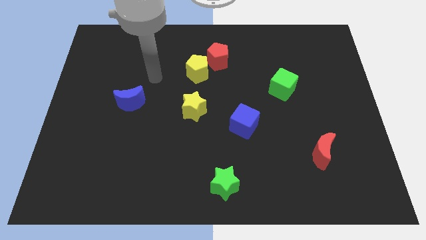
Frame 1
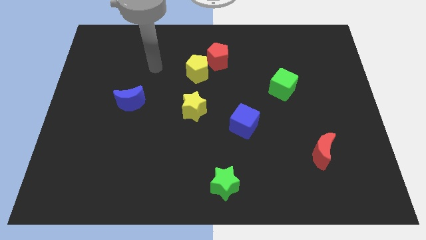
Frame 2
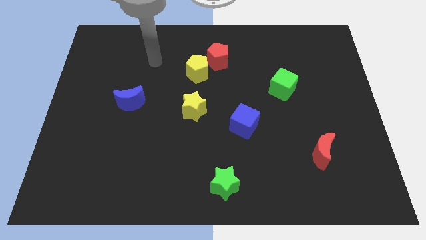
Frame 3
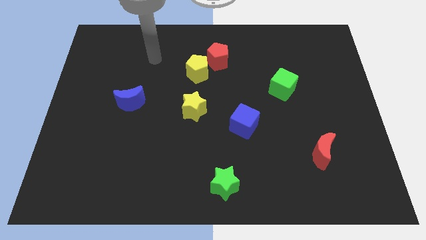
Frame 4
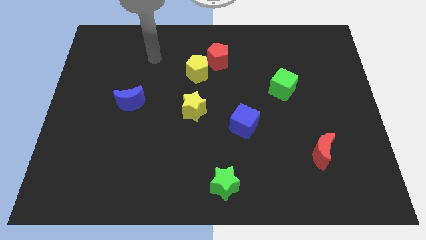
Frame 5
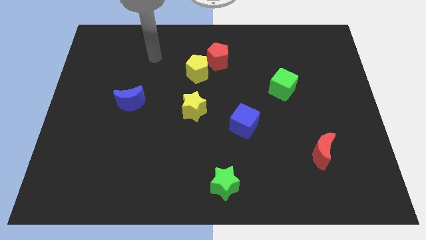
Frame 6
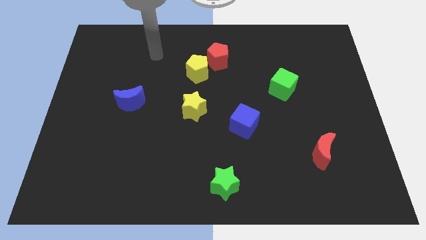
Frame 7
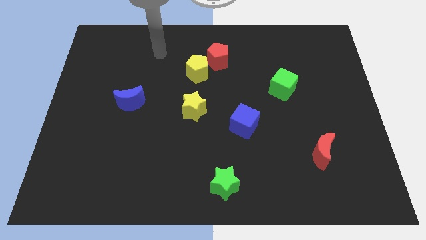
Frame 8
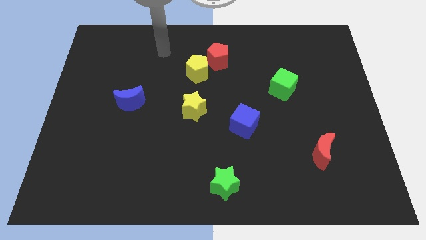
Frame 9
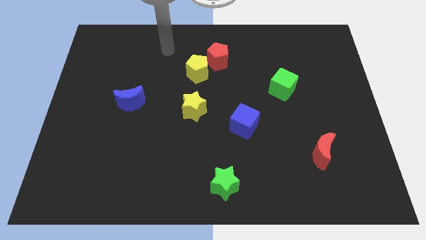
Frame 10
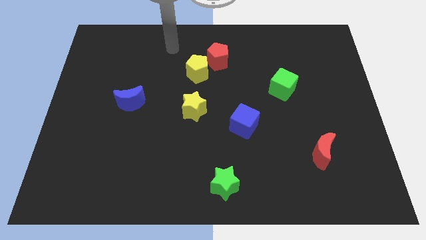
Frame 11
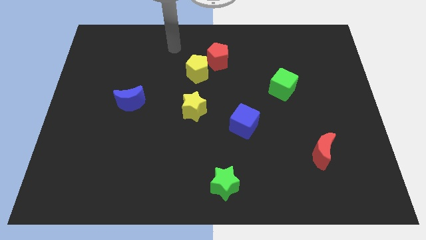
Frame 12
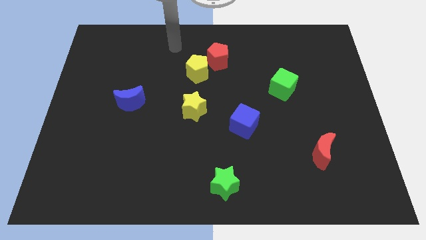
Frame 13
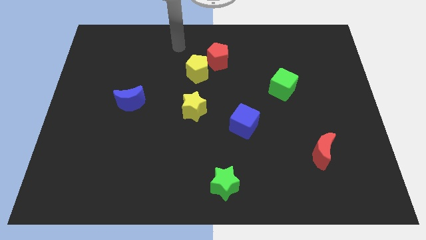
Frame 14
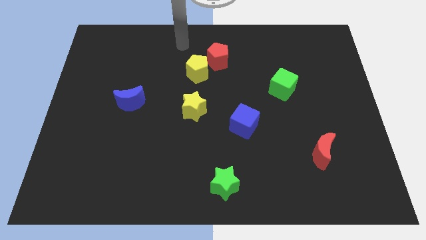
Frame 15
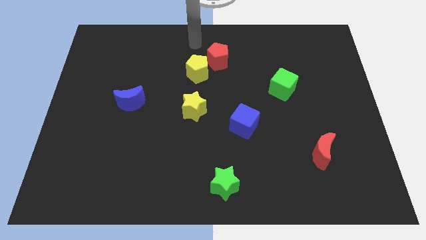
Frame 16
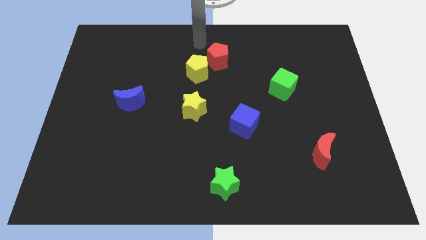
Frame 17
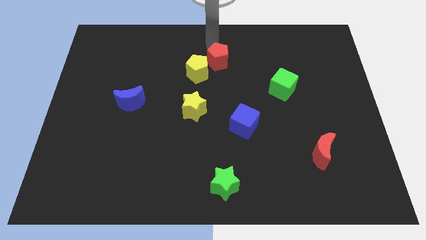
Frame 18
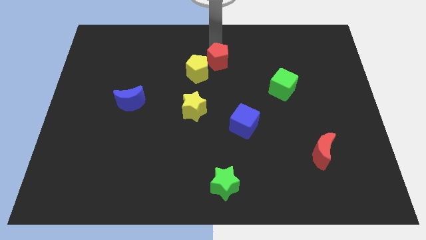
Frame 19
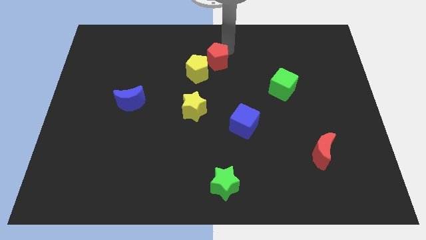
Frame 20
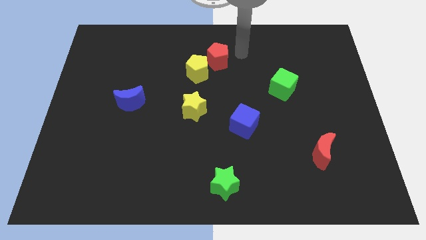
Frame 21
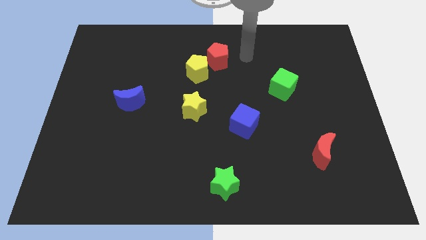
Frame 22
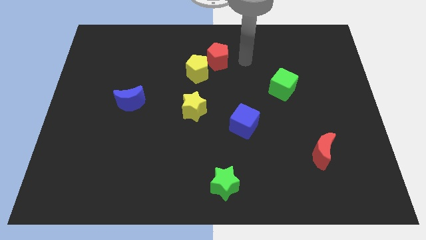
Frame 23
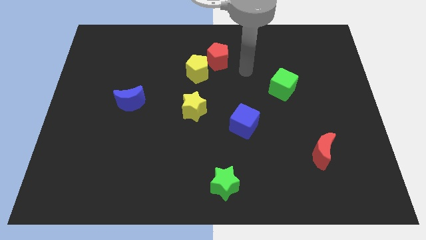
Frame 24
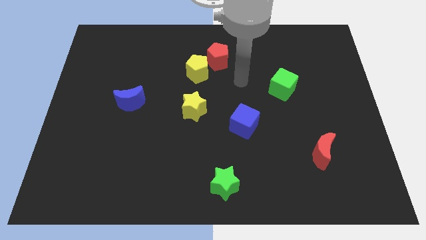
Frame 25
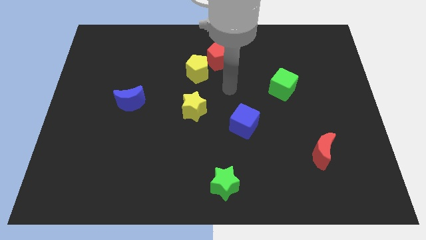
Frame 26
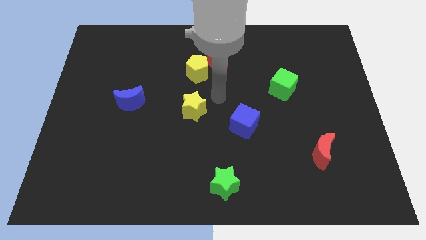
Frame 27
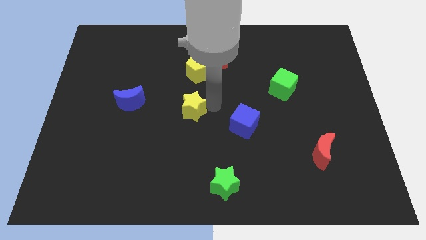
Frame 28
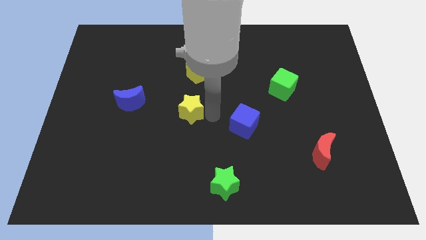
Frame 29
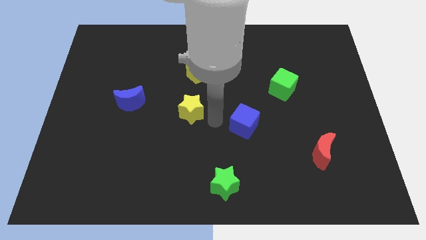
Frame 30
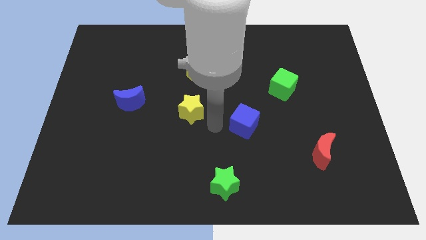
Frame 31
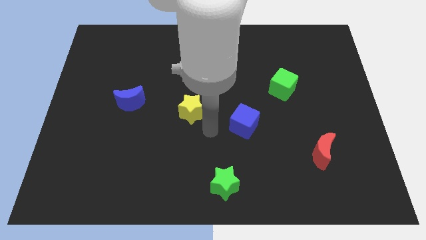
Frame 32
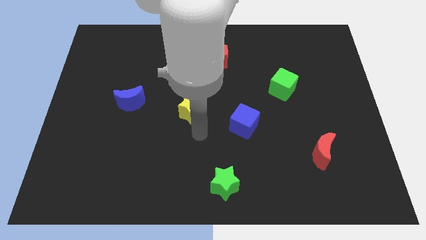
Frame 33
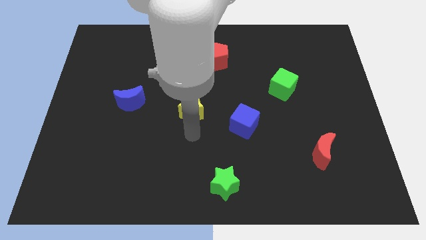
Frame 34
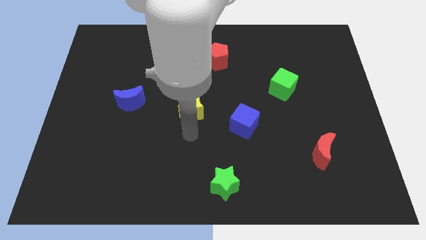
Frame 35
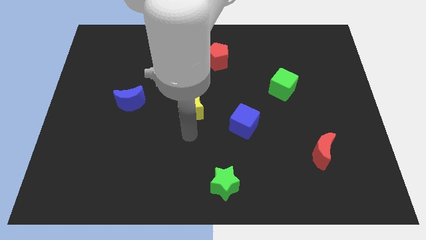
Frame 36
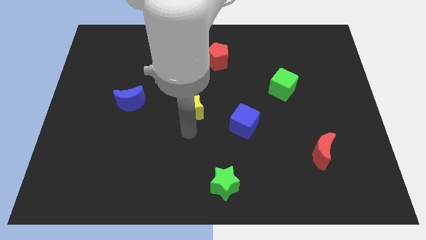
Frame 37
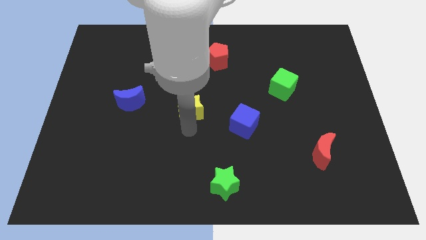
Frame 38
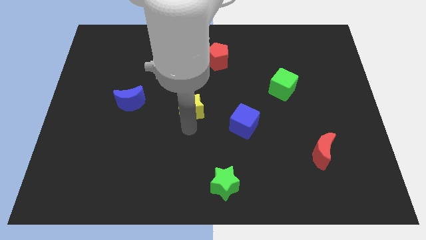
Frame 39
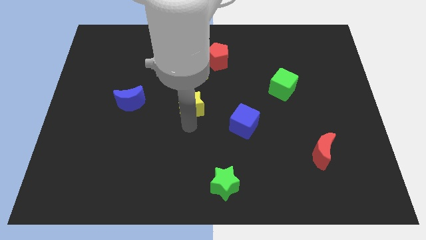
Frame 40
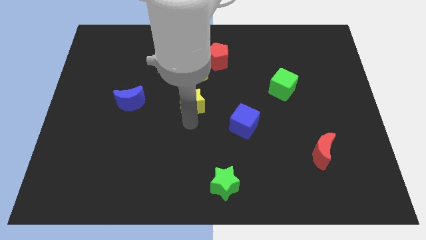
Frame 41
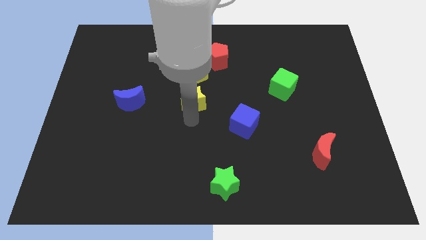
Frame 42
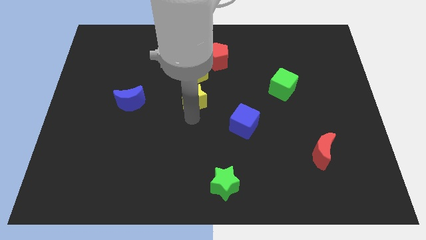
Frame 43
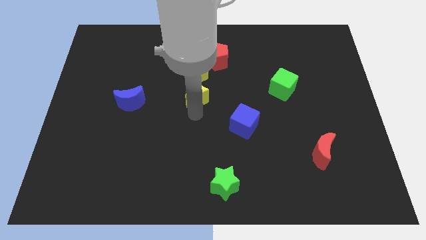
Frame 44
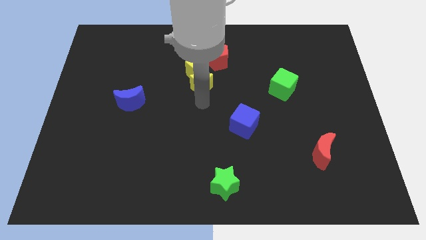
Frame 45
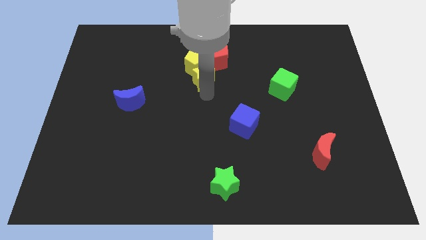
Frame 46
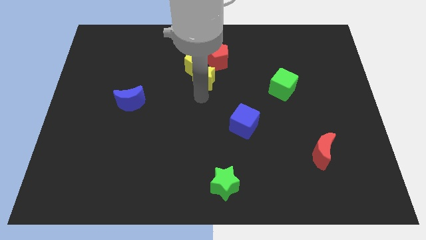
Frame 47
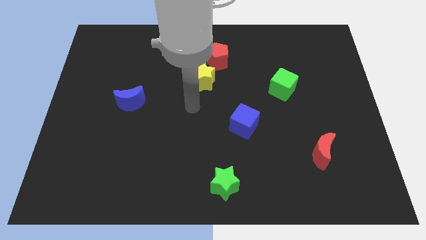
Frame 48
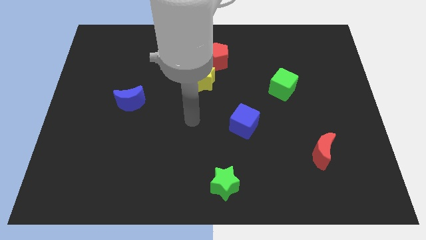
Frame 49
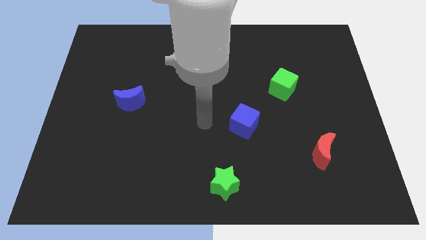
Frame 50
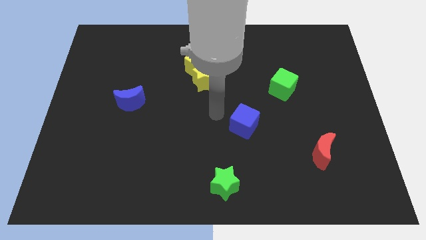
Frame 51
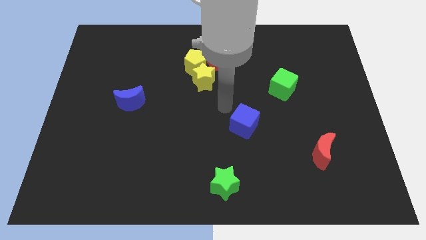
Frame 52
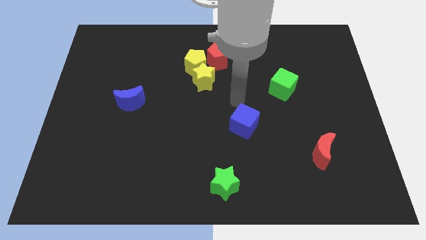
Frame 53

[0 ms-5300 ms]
move the yellow star below the yellow pentagon

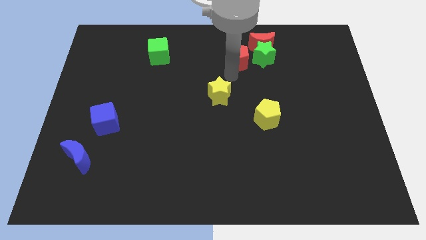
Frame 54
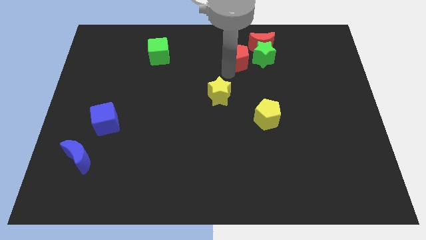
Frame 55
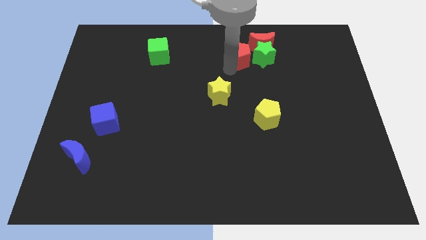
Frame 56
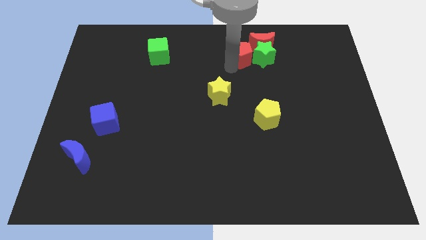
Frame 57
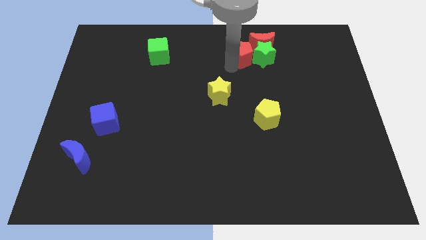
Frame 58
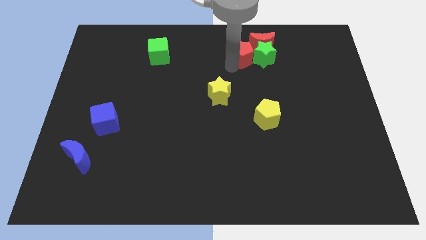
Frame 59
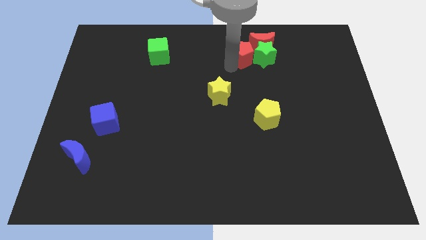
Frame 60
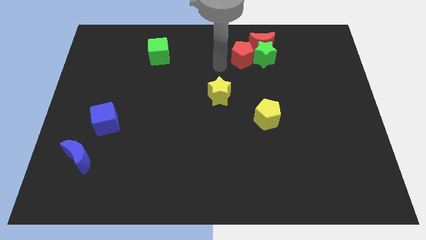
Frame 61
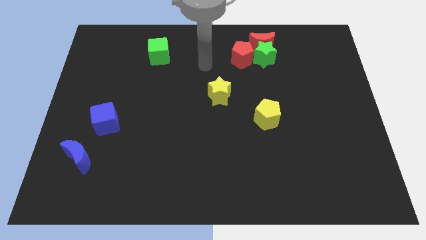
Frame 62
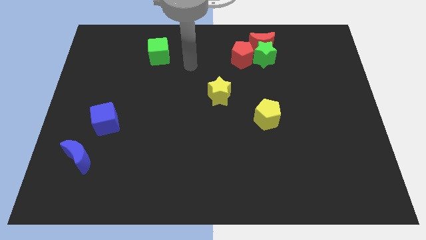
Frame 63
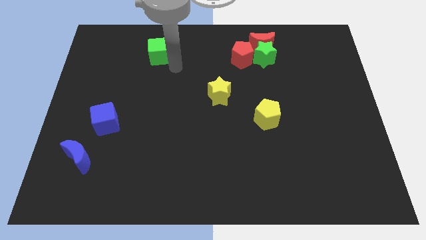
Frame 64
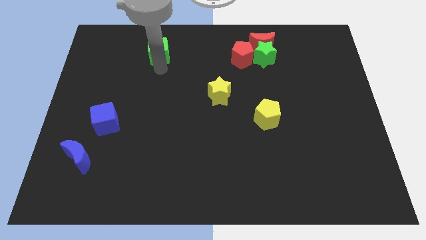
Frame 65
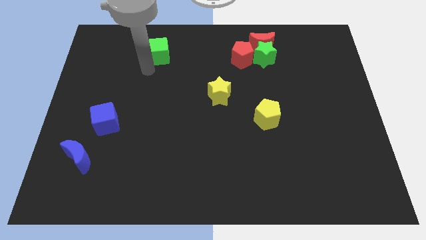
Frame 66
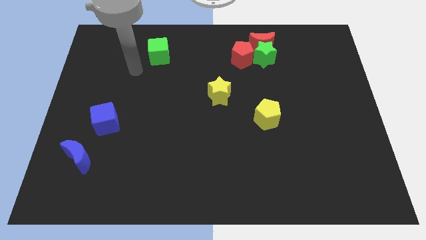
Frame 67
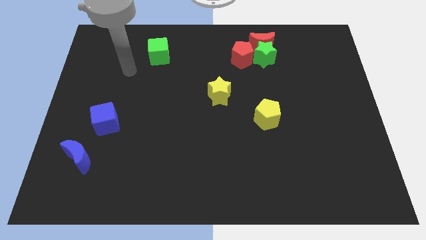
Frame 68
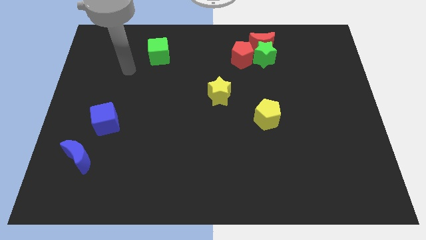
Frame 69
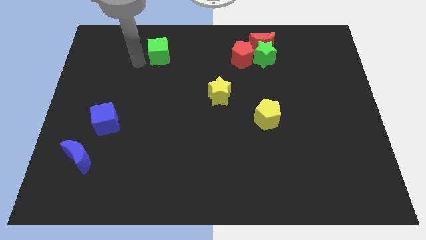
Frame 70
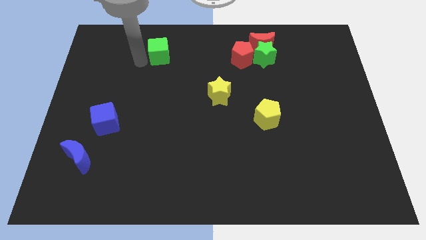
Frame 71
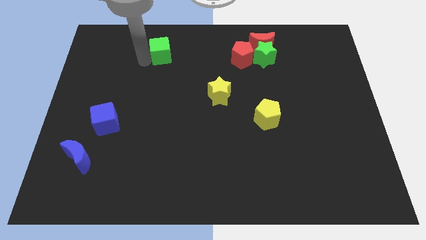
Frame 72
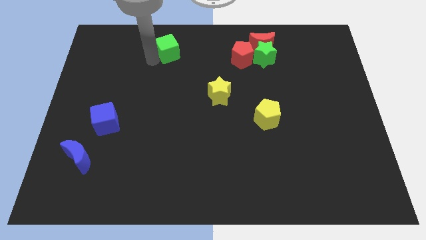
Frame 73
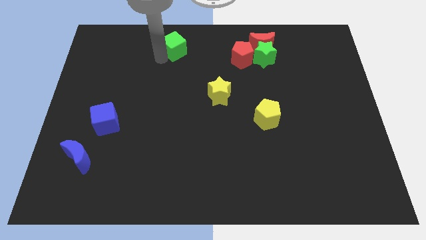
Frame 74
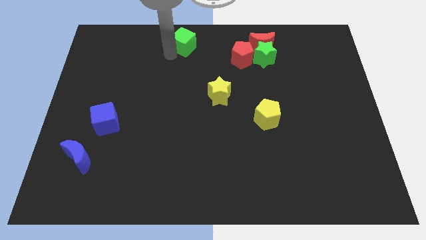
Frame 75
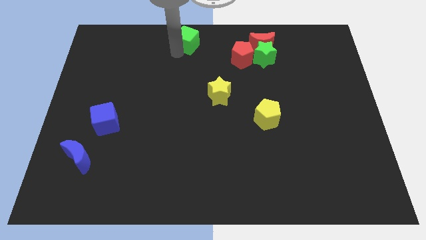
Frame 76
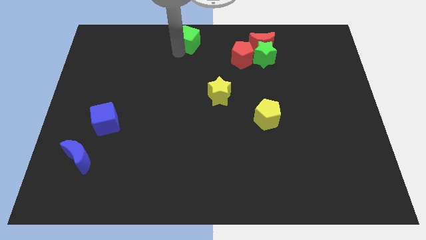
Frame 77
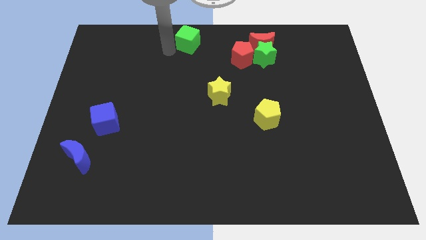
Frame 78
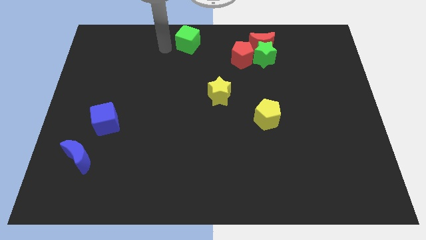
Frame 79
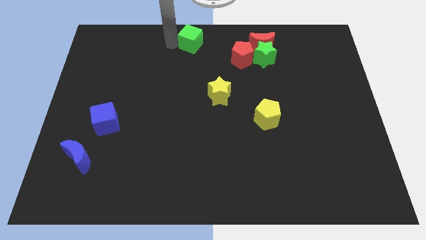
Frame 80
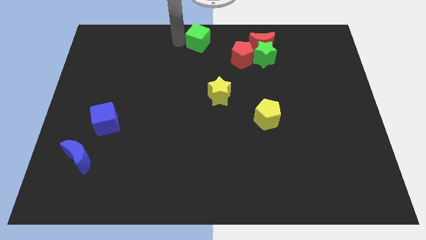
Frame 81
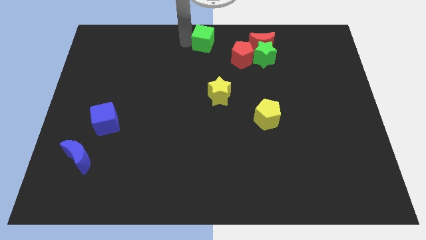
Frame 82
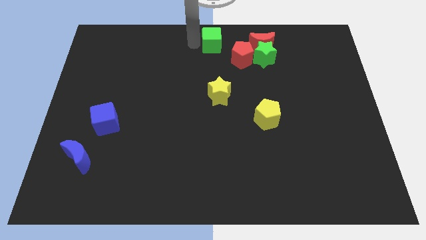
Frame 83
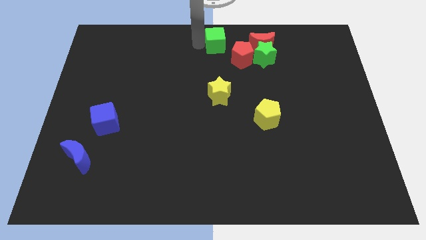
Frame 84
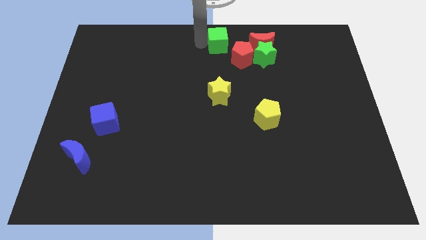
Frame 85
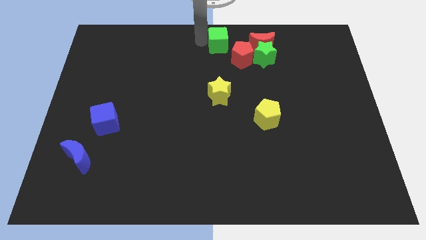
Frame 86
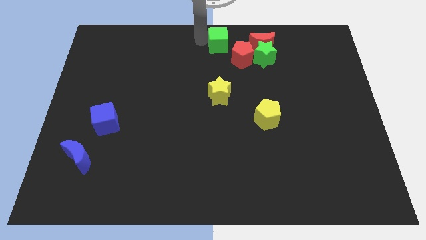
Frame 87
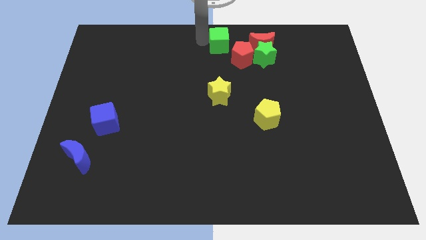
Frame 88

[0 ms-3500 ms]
move green cube to the top center of the board

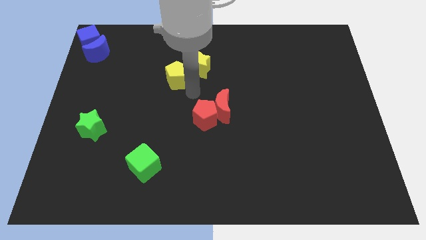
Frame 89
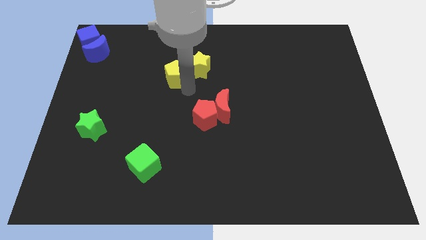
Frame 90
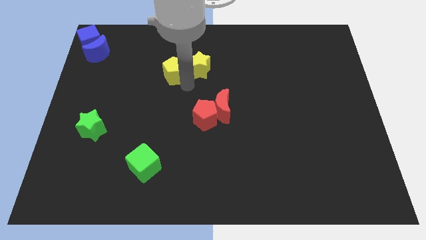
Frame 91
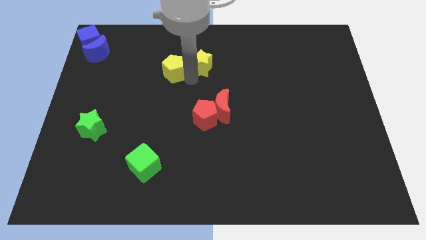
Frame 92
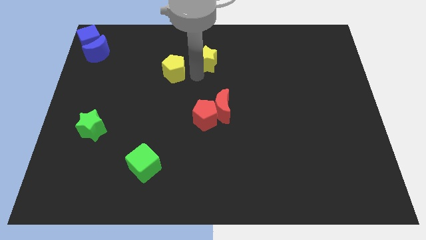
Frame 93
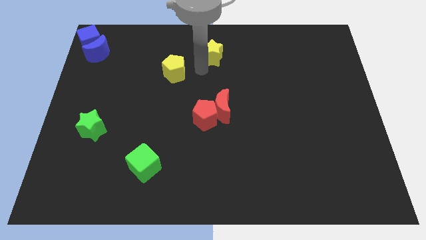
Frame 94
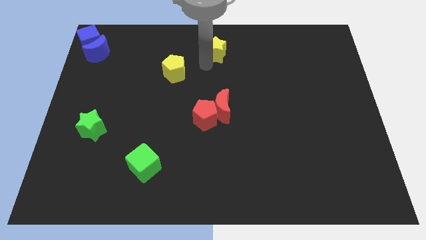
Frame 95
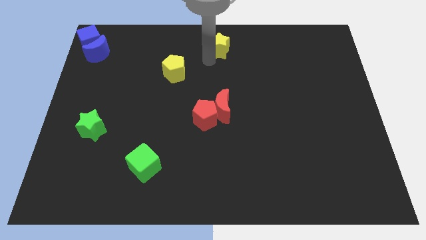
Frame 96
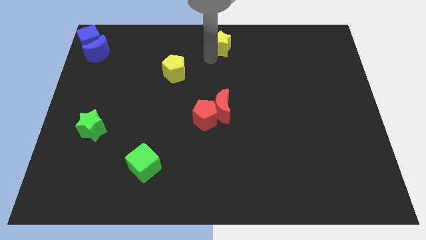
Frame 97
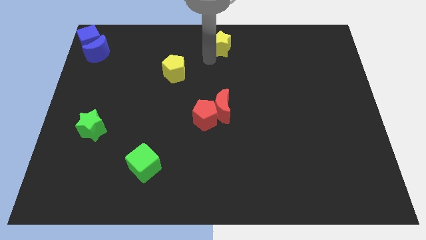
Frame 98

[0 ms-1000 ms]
put the yellow star above the group of red blocks
